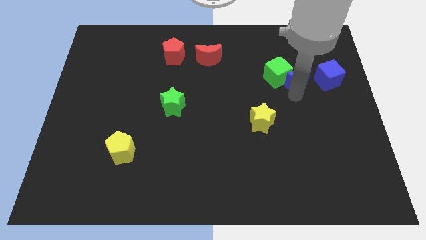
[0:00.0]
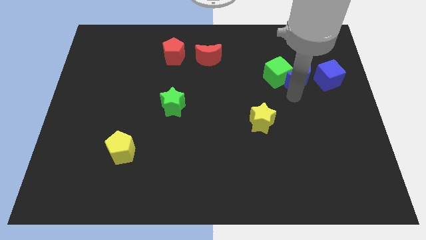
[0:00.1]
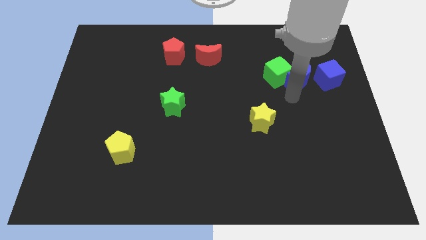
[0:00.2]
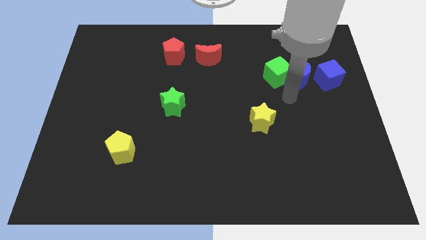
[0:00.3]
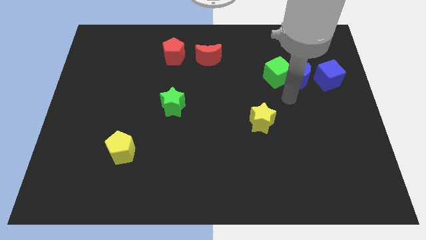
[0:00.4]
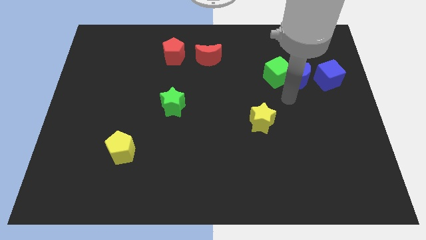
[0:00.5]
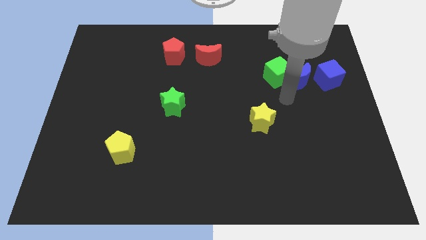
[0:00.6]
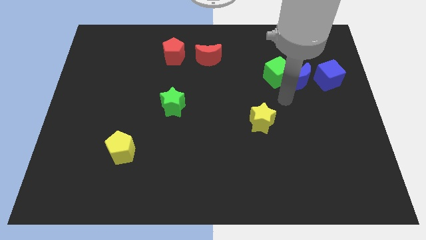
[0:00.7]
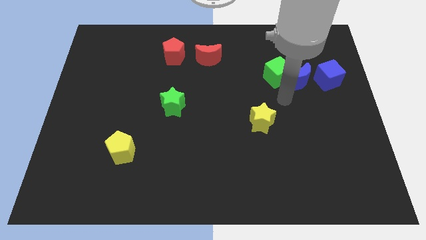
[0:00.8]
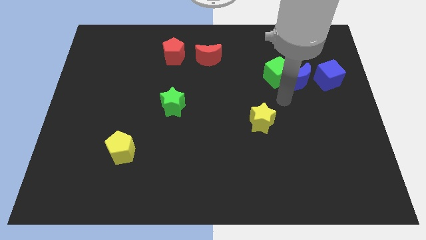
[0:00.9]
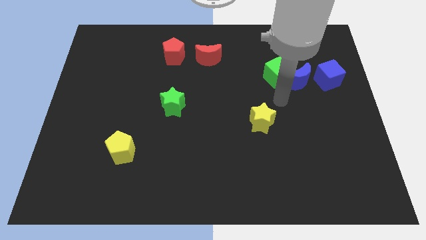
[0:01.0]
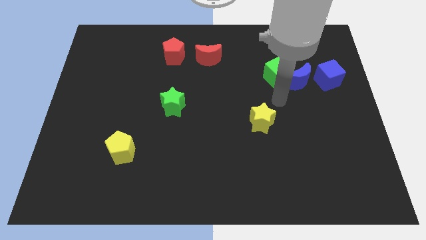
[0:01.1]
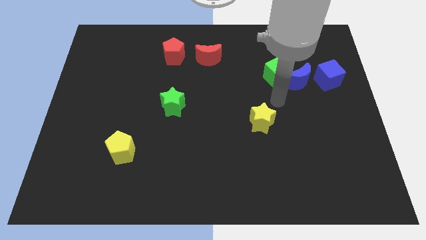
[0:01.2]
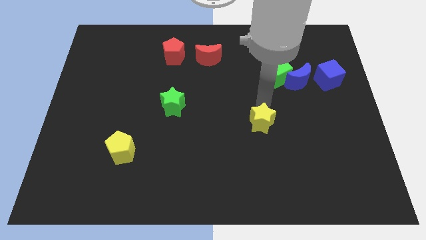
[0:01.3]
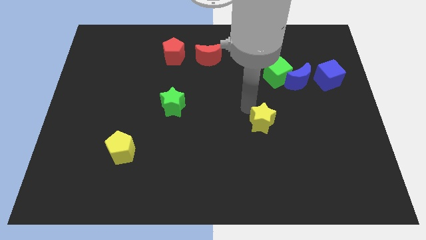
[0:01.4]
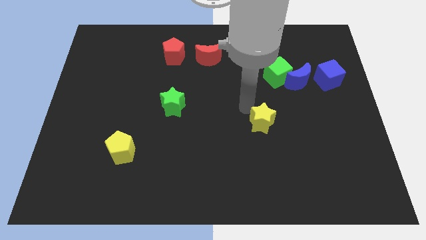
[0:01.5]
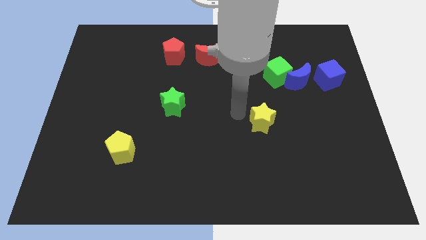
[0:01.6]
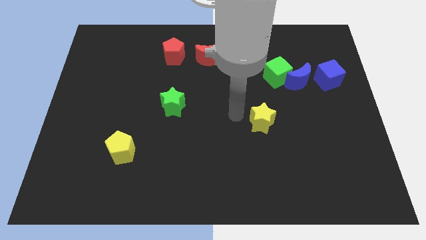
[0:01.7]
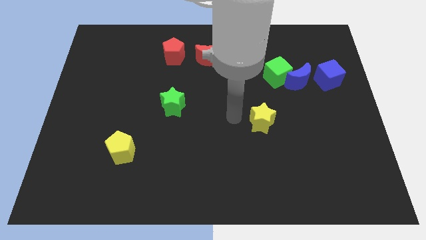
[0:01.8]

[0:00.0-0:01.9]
go away from the blue moon

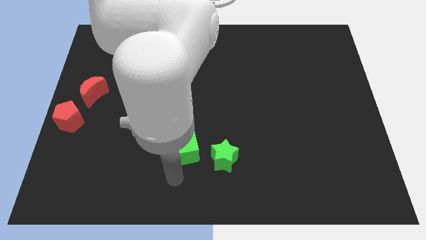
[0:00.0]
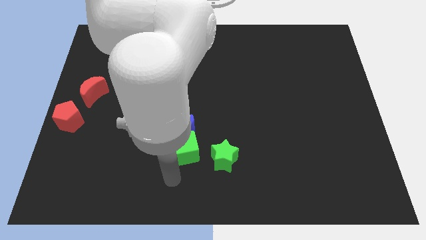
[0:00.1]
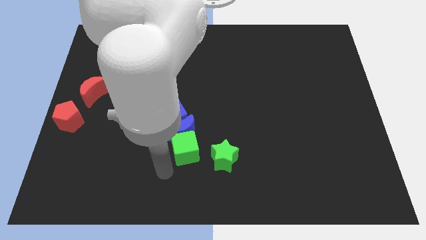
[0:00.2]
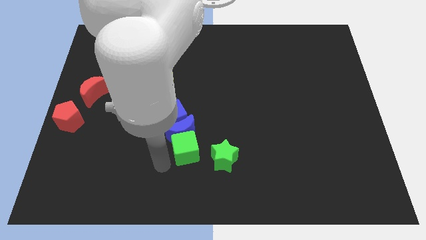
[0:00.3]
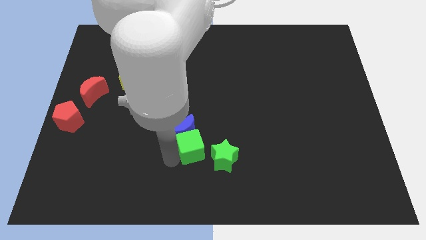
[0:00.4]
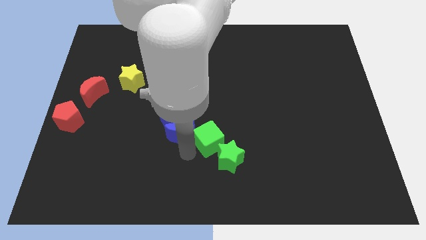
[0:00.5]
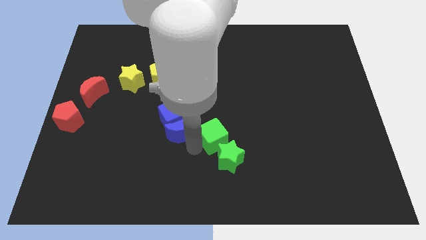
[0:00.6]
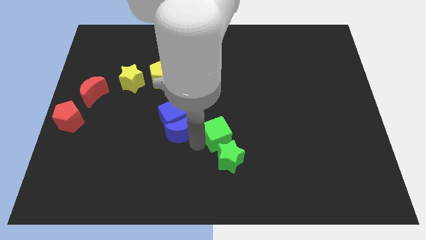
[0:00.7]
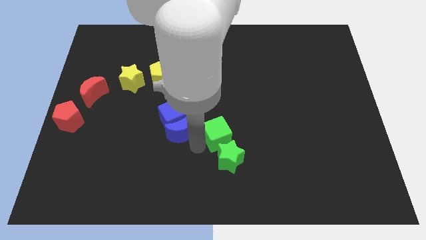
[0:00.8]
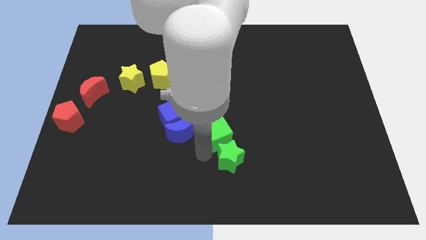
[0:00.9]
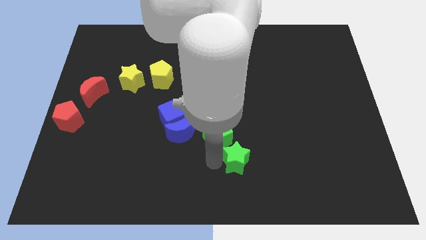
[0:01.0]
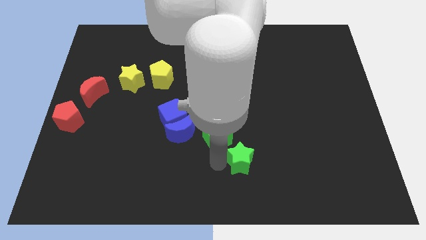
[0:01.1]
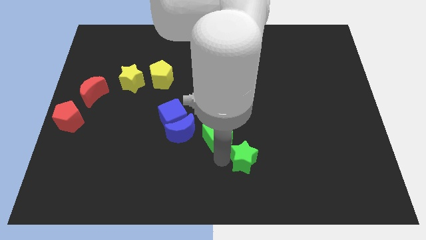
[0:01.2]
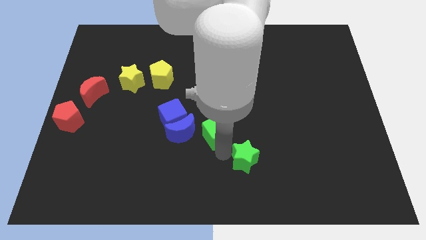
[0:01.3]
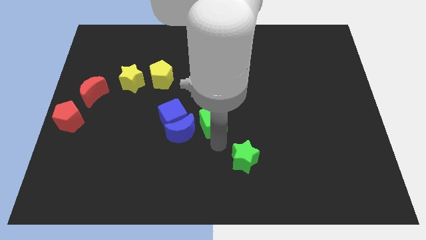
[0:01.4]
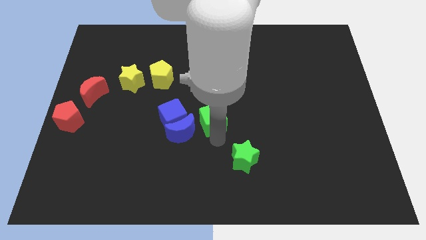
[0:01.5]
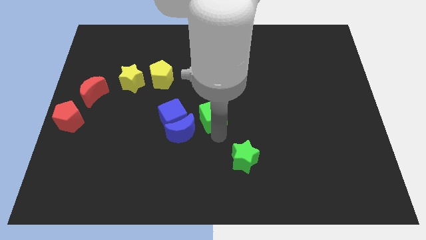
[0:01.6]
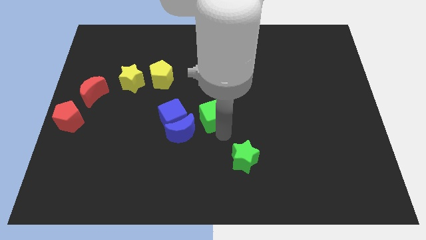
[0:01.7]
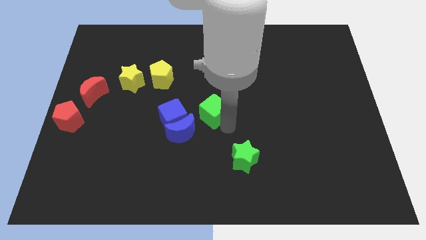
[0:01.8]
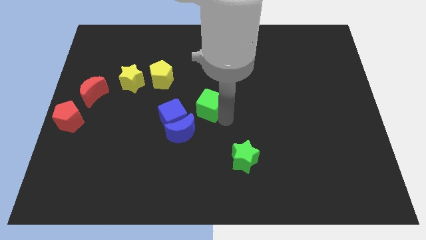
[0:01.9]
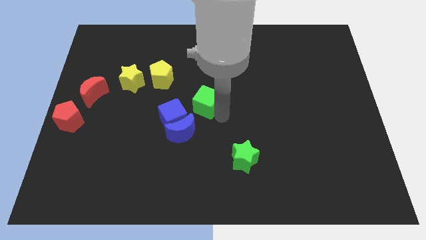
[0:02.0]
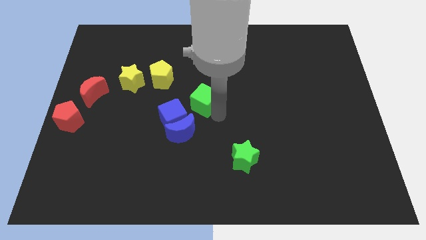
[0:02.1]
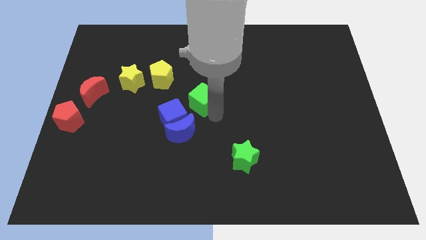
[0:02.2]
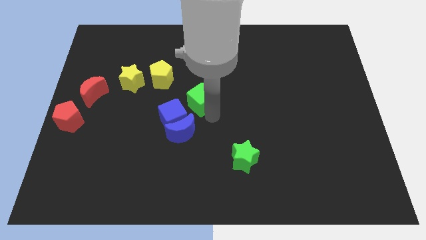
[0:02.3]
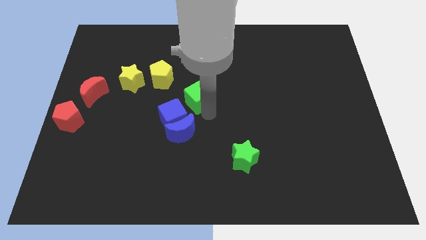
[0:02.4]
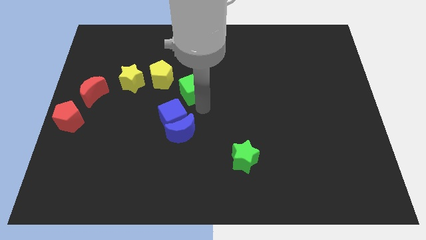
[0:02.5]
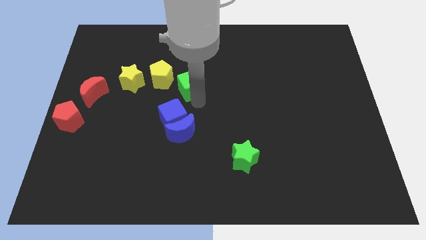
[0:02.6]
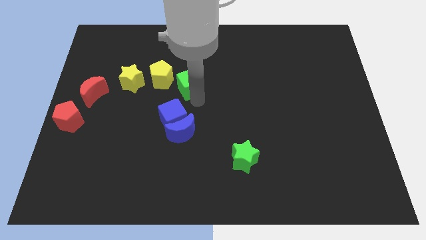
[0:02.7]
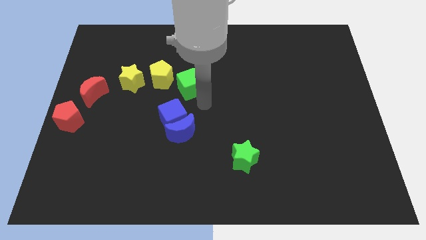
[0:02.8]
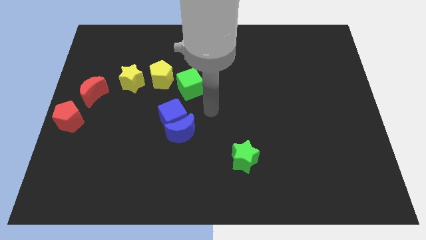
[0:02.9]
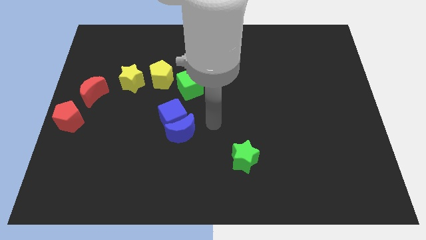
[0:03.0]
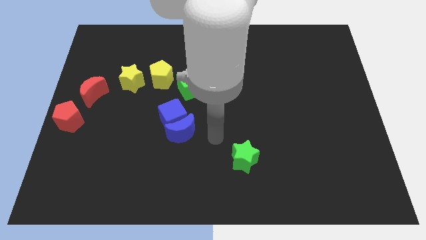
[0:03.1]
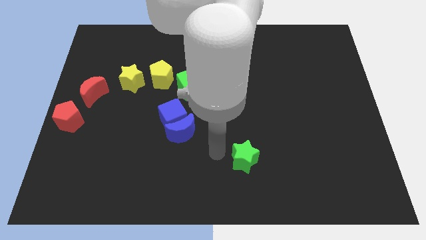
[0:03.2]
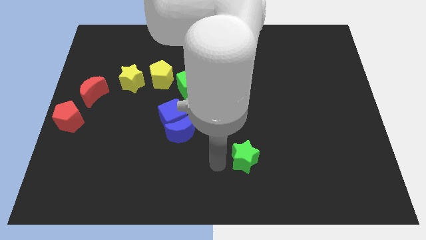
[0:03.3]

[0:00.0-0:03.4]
place the green cube diagonally top right to the blue cube

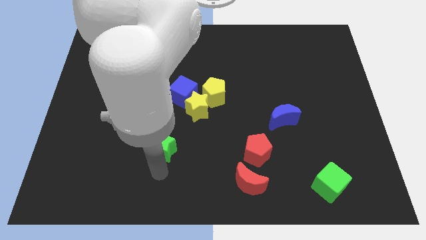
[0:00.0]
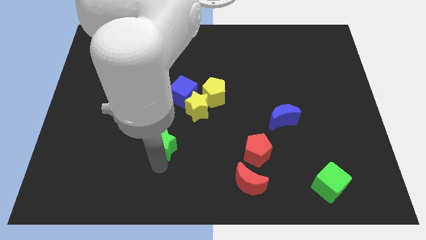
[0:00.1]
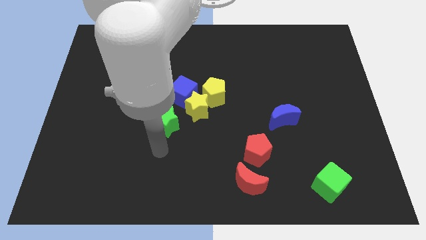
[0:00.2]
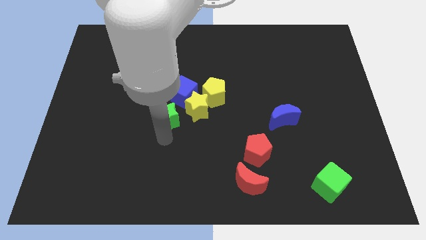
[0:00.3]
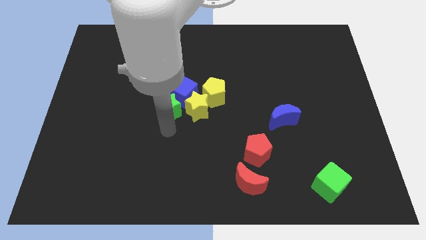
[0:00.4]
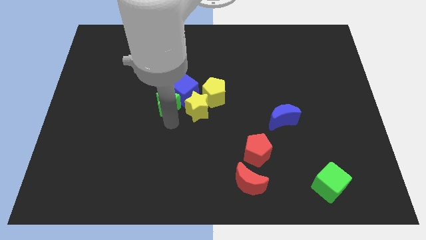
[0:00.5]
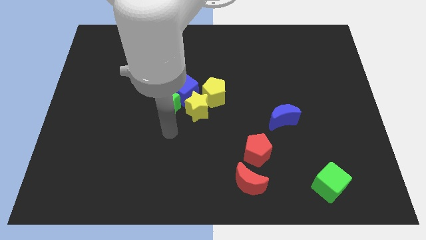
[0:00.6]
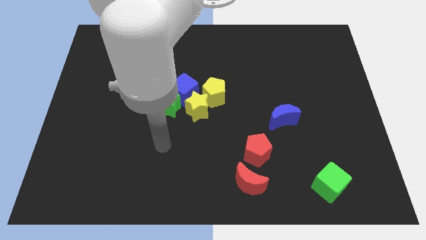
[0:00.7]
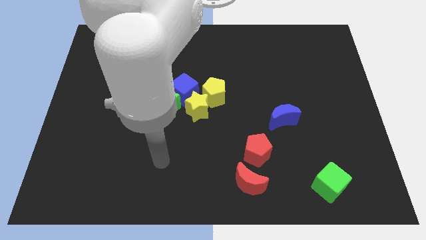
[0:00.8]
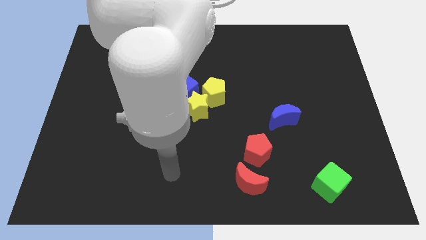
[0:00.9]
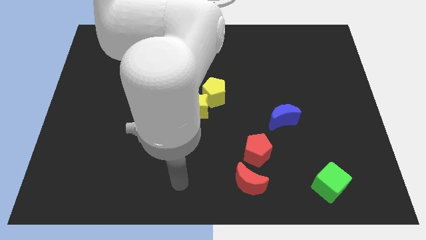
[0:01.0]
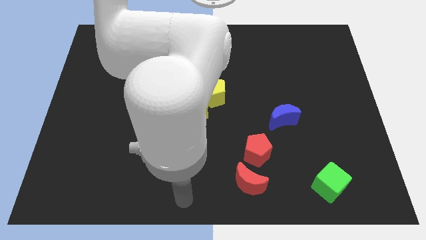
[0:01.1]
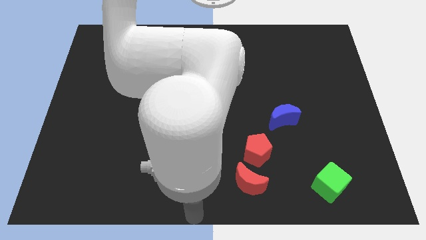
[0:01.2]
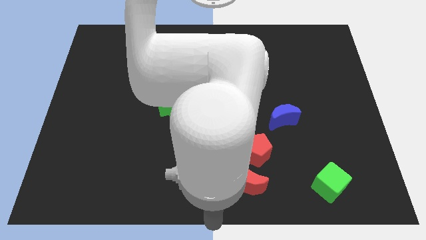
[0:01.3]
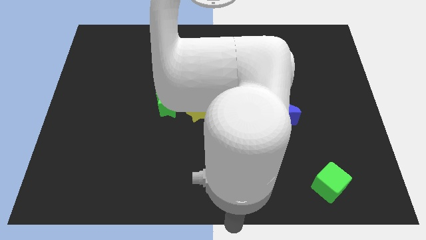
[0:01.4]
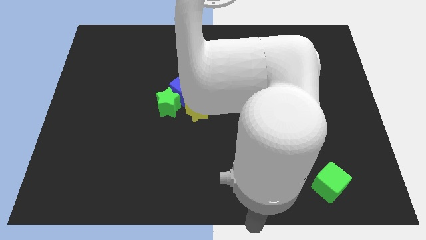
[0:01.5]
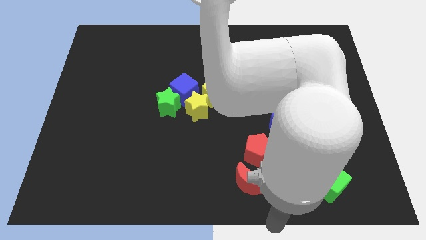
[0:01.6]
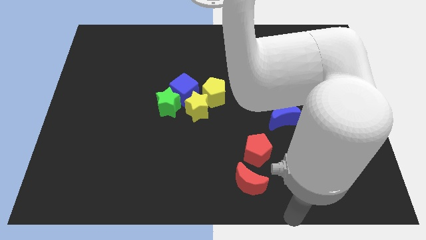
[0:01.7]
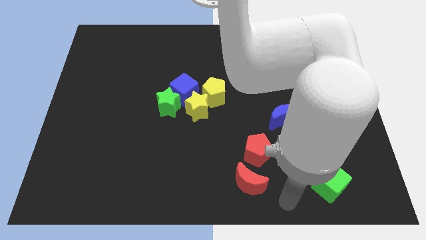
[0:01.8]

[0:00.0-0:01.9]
place green star beside blue cube

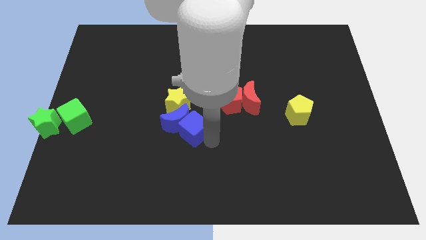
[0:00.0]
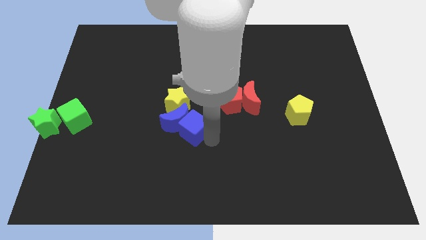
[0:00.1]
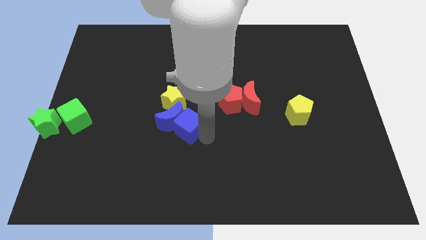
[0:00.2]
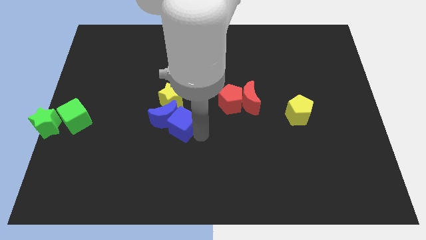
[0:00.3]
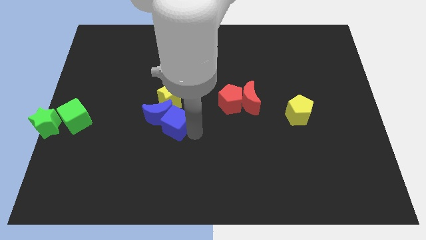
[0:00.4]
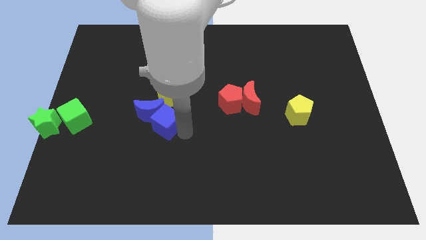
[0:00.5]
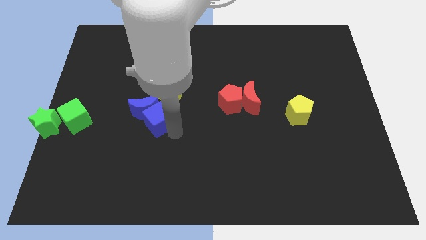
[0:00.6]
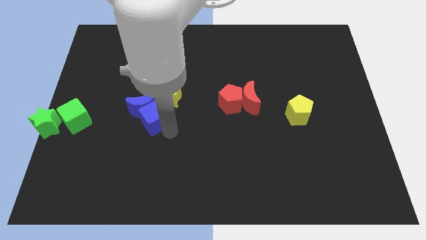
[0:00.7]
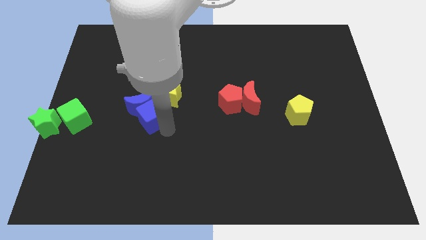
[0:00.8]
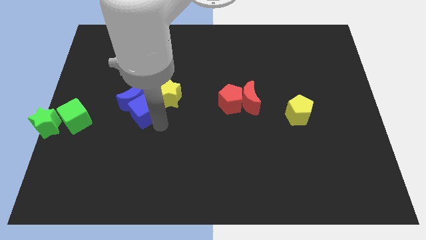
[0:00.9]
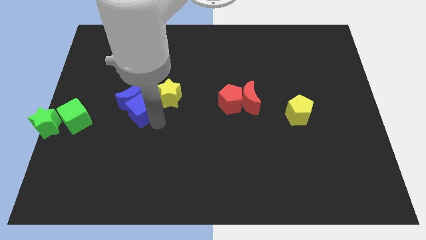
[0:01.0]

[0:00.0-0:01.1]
put the blue blocks left to the yellow star

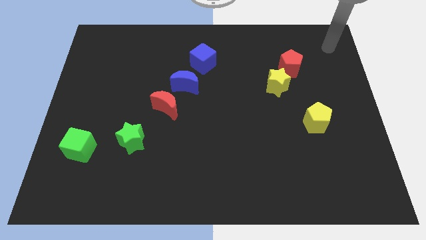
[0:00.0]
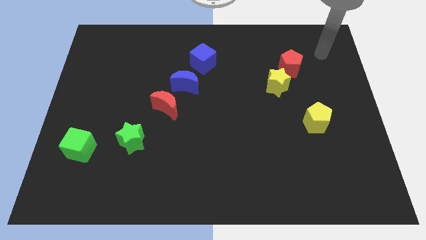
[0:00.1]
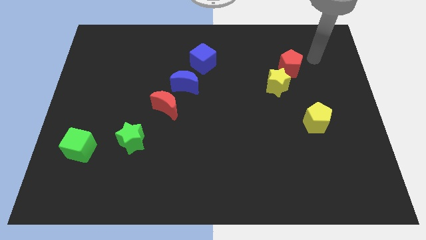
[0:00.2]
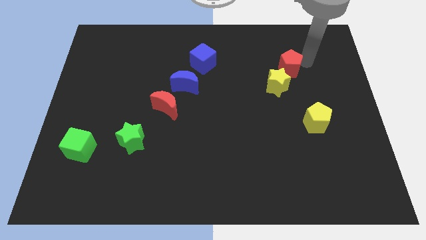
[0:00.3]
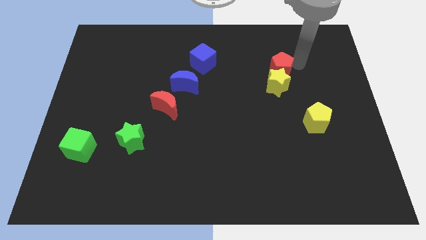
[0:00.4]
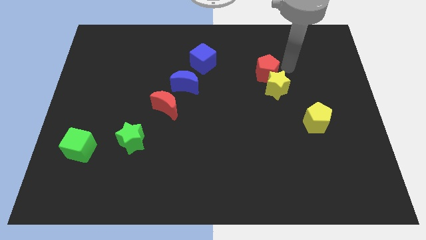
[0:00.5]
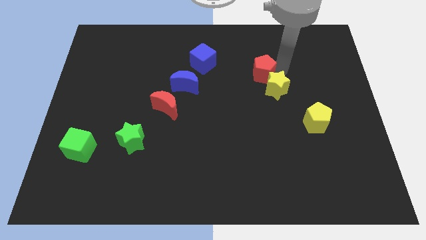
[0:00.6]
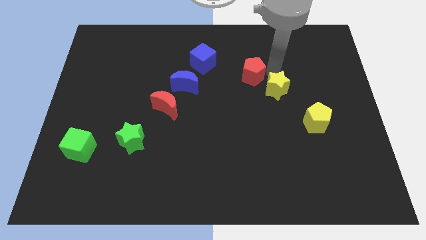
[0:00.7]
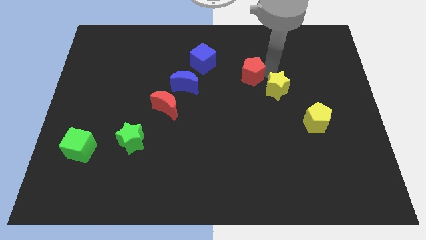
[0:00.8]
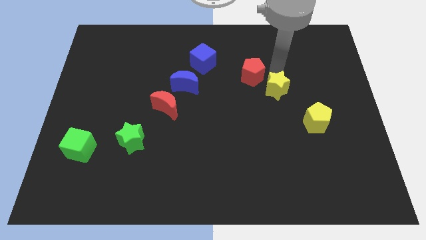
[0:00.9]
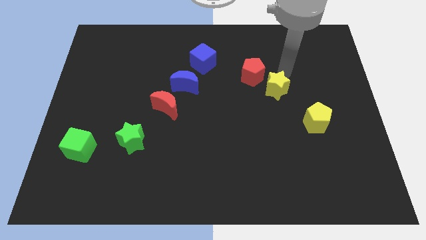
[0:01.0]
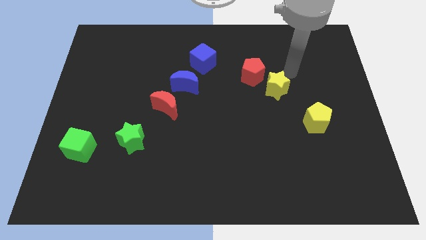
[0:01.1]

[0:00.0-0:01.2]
push red pentagon to the top left to the yellow star
